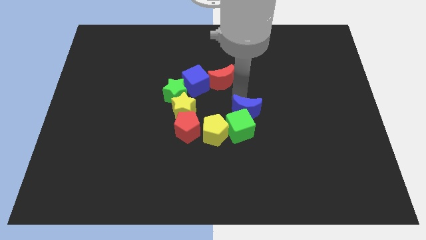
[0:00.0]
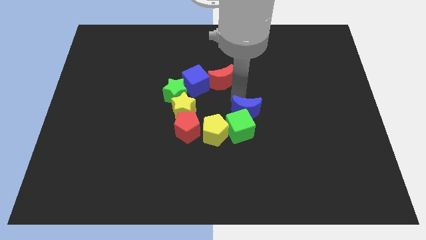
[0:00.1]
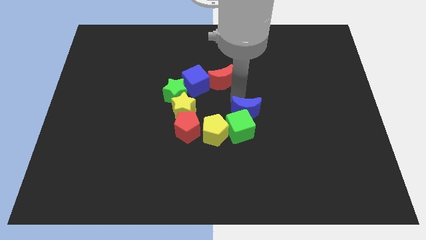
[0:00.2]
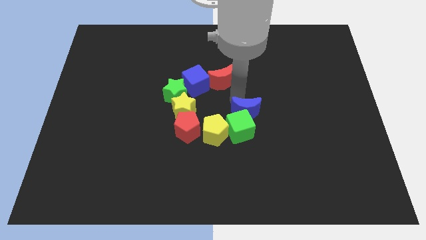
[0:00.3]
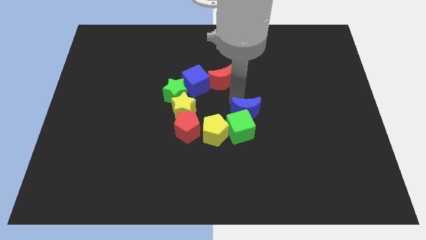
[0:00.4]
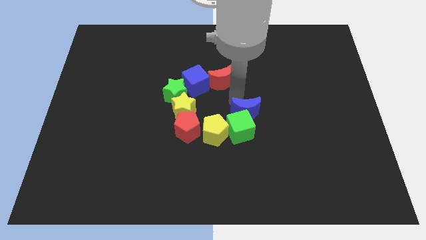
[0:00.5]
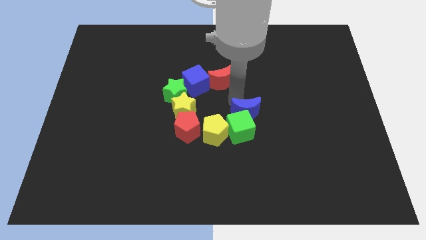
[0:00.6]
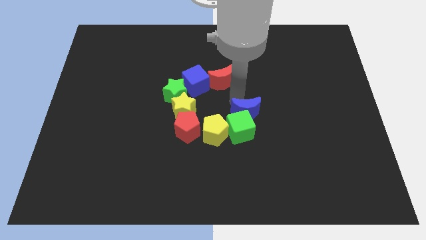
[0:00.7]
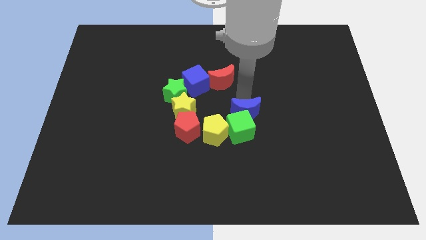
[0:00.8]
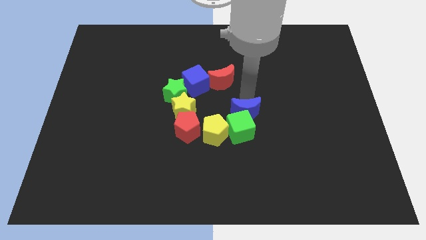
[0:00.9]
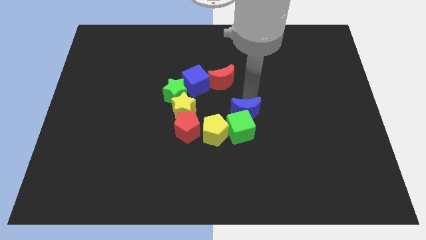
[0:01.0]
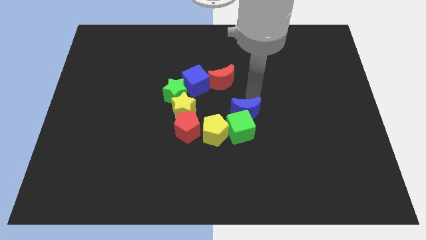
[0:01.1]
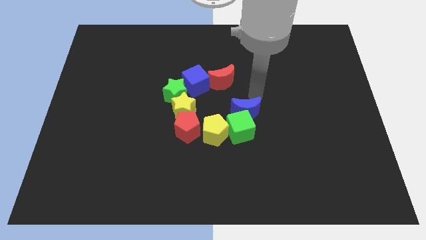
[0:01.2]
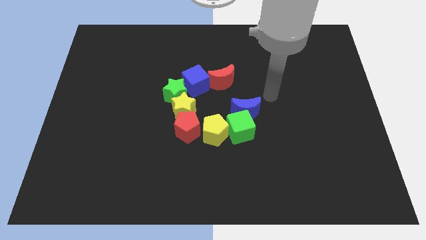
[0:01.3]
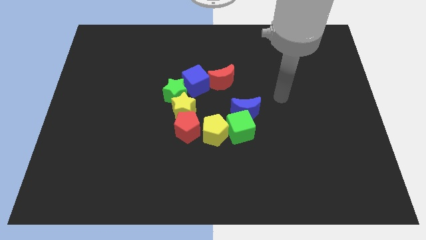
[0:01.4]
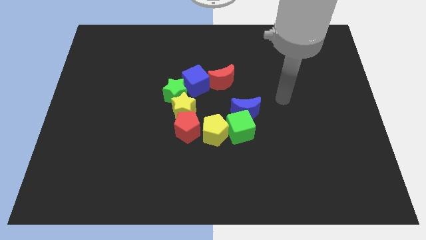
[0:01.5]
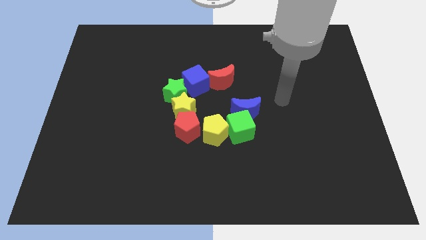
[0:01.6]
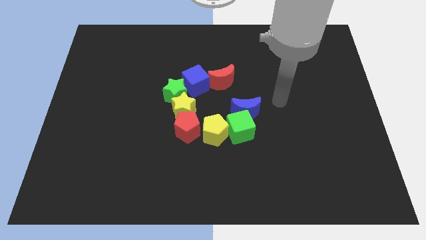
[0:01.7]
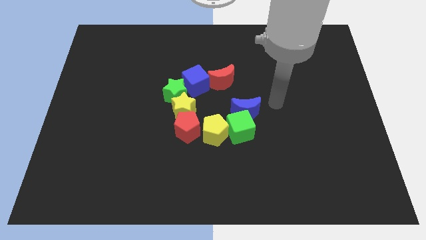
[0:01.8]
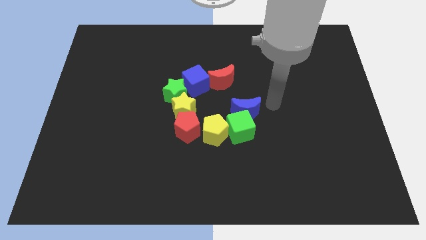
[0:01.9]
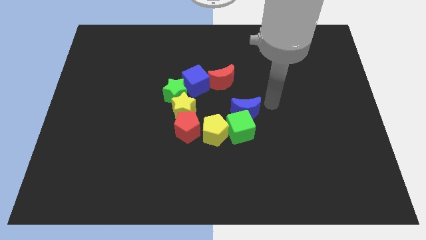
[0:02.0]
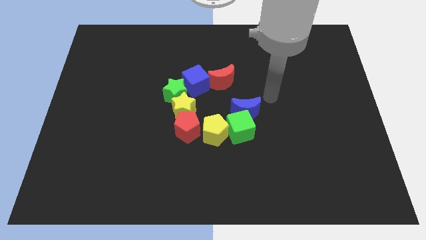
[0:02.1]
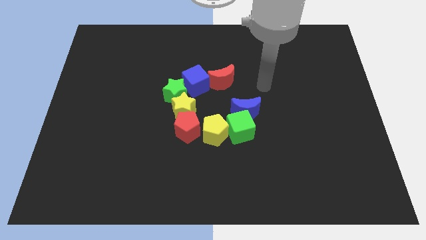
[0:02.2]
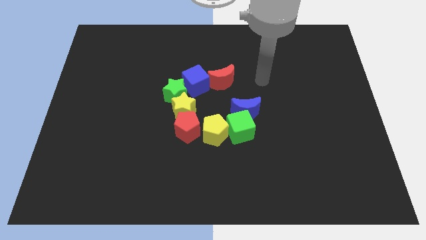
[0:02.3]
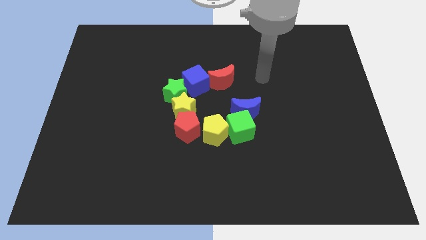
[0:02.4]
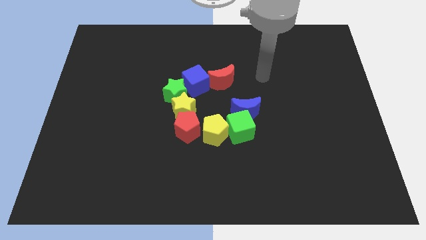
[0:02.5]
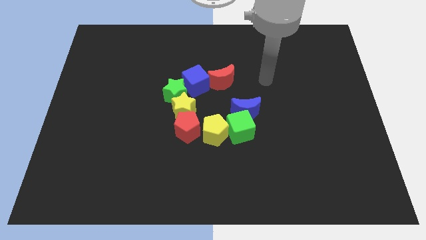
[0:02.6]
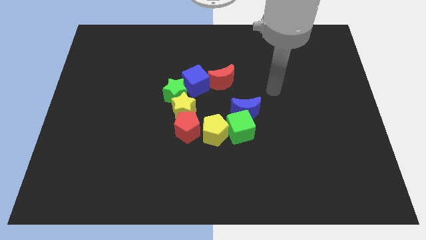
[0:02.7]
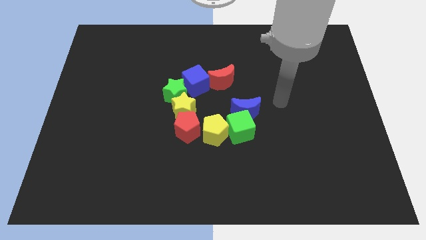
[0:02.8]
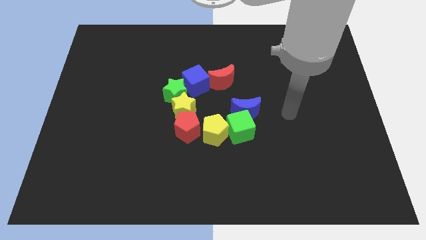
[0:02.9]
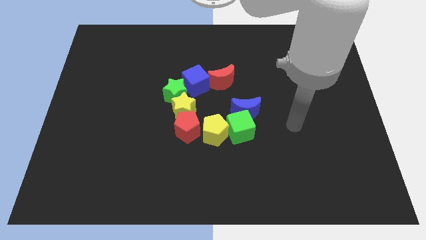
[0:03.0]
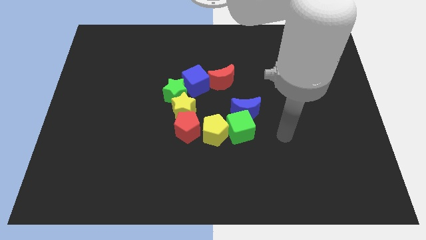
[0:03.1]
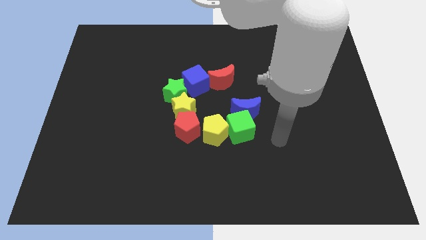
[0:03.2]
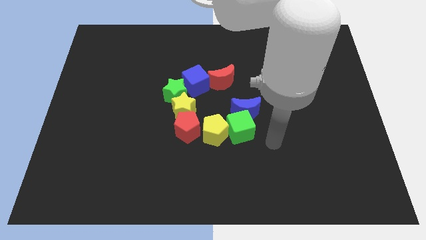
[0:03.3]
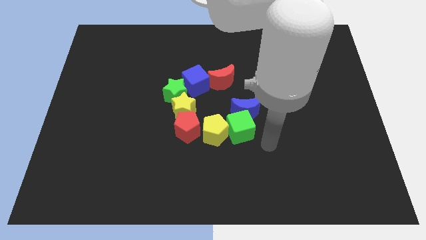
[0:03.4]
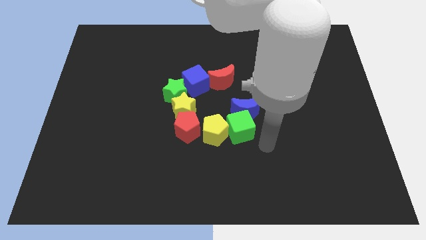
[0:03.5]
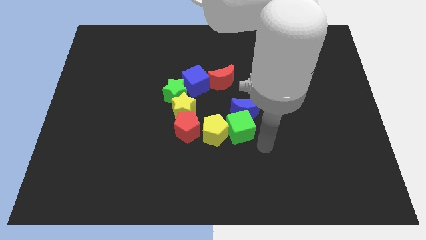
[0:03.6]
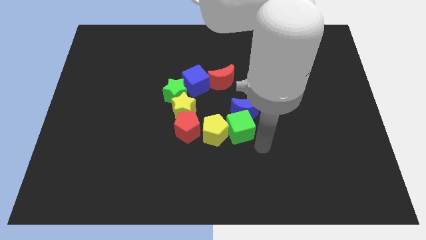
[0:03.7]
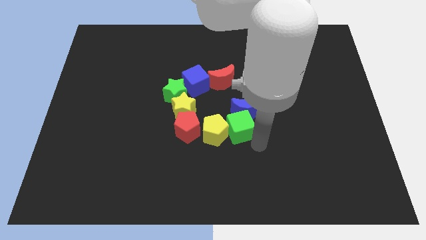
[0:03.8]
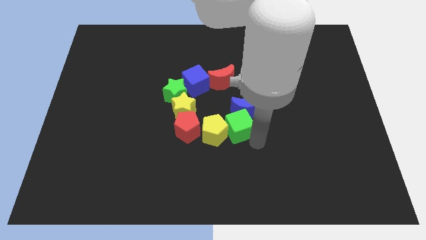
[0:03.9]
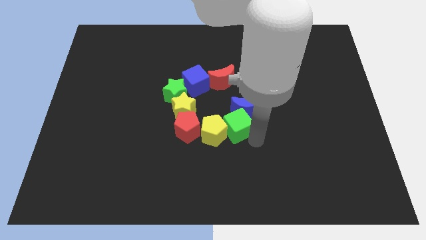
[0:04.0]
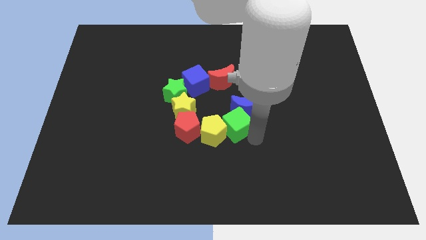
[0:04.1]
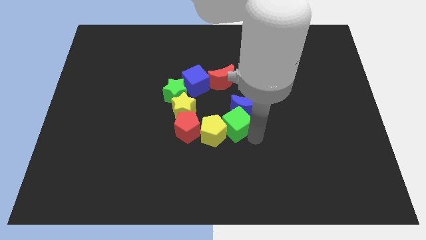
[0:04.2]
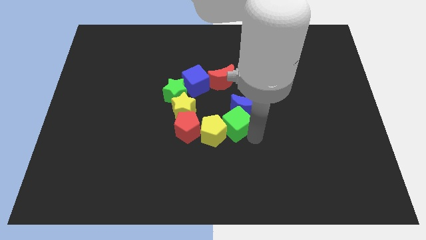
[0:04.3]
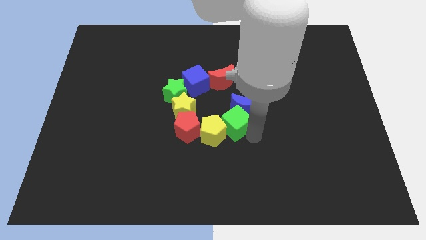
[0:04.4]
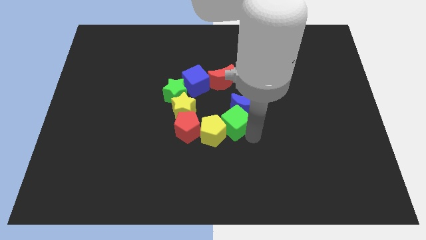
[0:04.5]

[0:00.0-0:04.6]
adjust the green cube

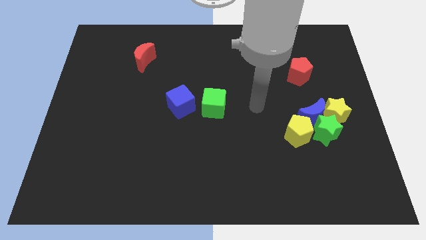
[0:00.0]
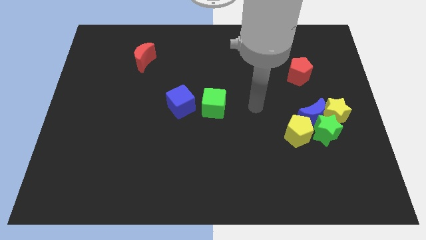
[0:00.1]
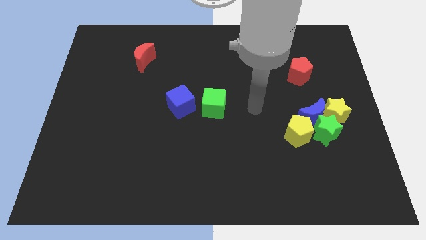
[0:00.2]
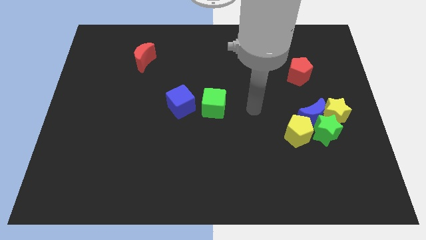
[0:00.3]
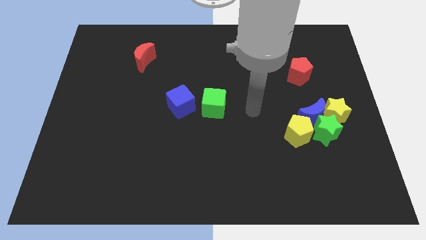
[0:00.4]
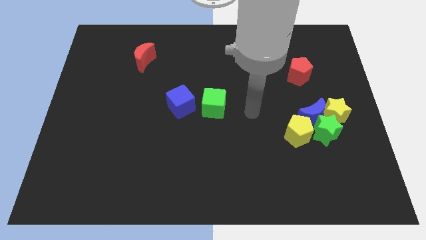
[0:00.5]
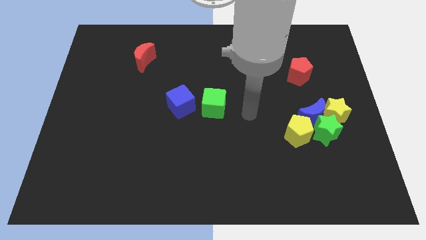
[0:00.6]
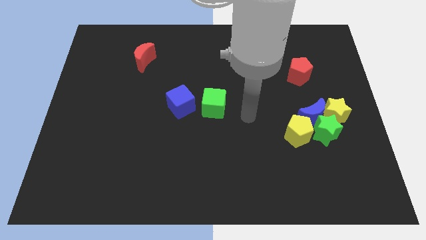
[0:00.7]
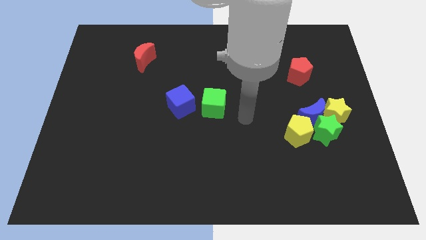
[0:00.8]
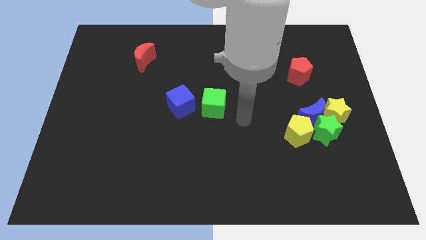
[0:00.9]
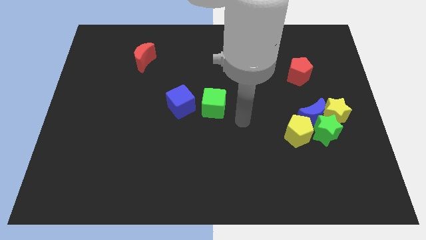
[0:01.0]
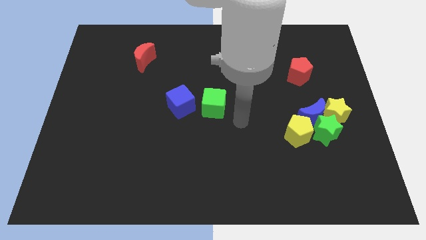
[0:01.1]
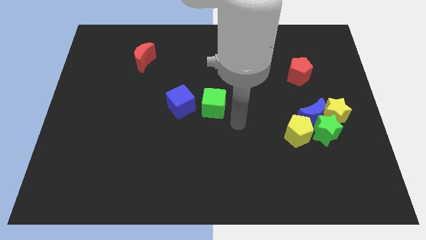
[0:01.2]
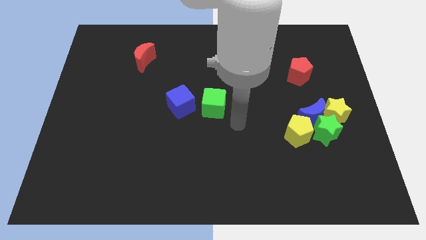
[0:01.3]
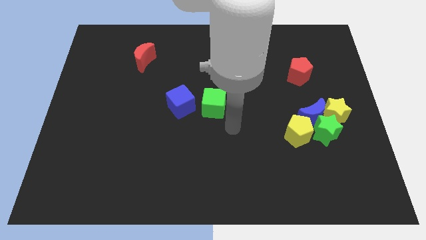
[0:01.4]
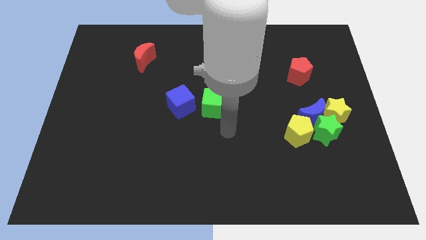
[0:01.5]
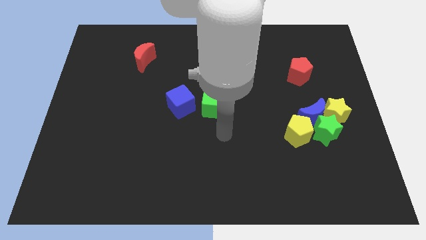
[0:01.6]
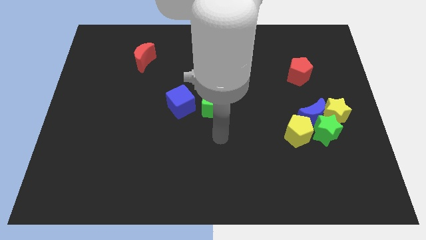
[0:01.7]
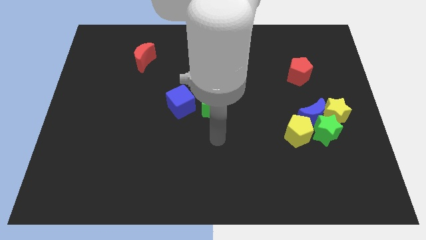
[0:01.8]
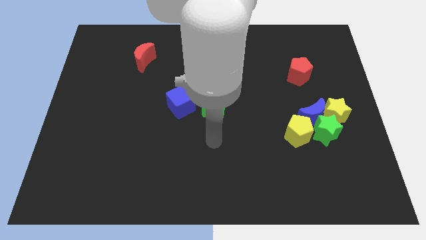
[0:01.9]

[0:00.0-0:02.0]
point your hand below the green cube

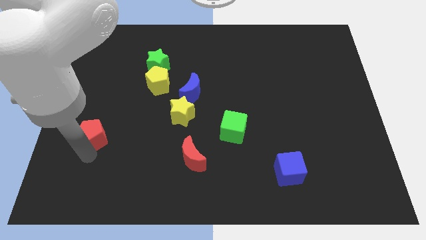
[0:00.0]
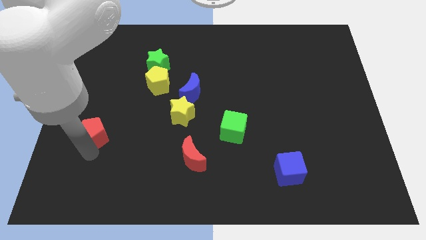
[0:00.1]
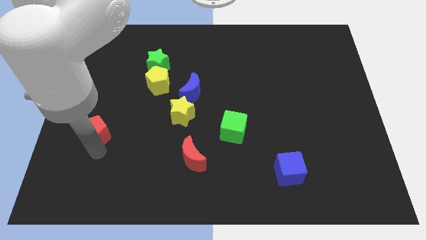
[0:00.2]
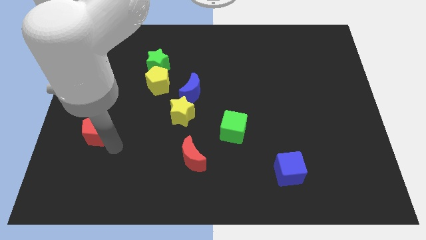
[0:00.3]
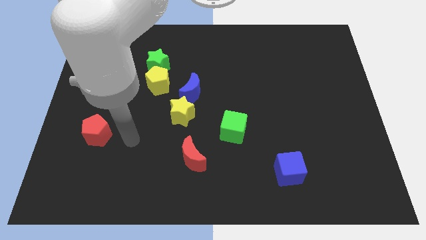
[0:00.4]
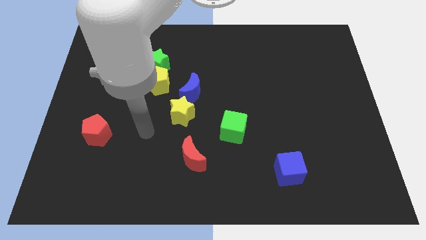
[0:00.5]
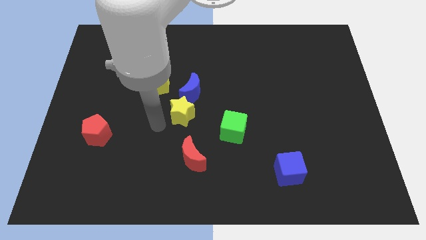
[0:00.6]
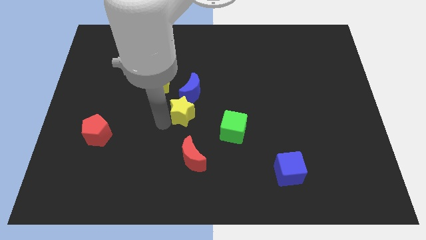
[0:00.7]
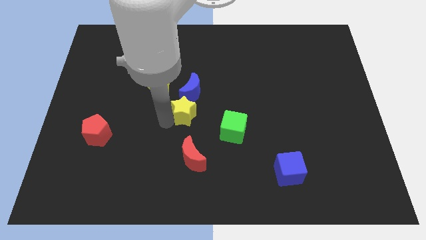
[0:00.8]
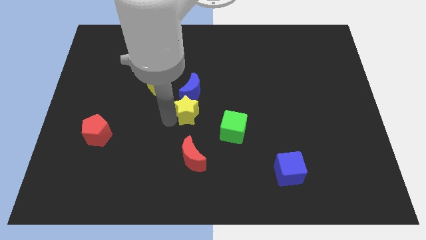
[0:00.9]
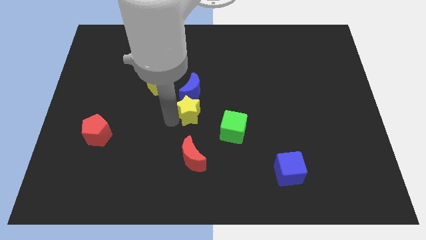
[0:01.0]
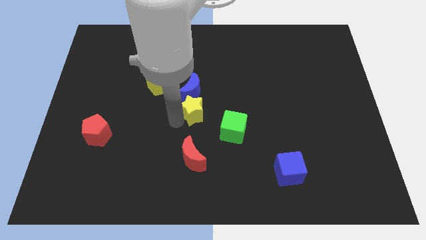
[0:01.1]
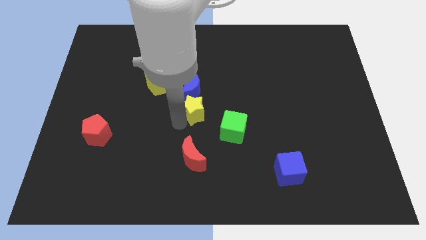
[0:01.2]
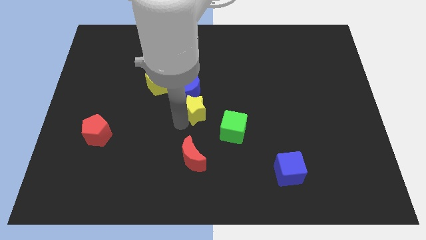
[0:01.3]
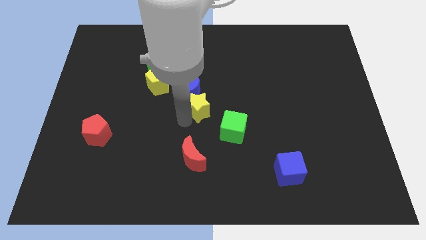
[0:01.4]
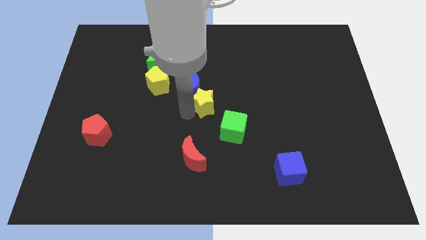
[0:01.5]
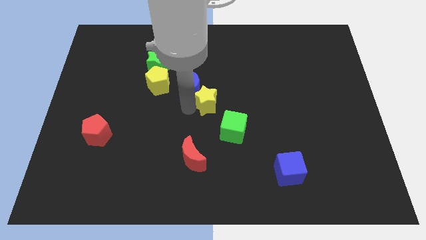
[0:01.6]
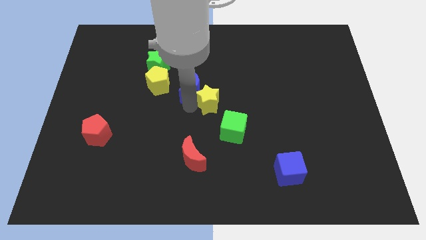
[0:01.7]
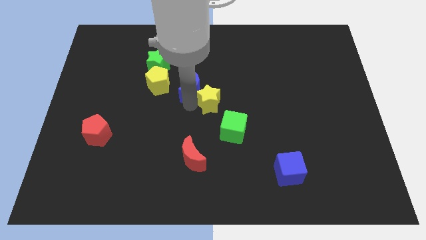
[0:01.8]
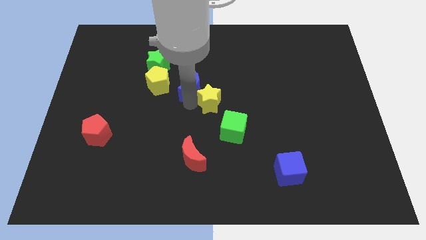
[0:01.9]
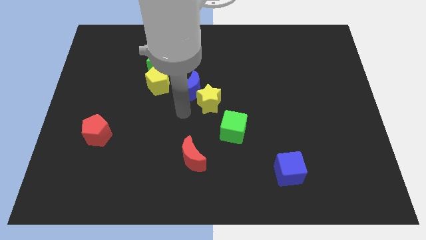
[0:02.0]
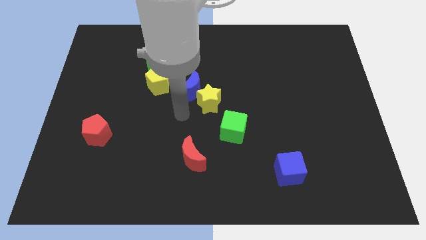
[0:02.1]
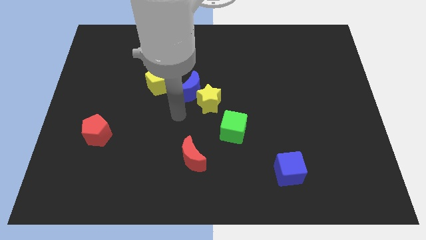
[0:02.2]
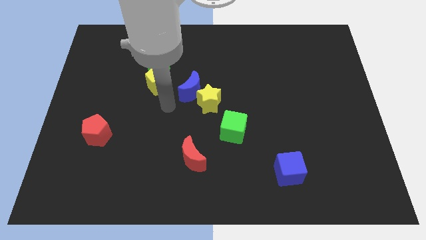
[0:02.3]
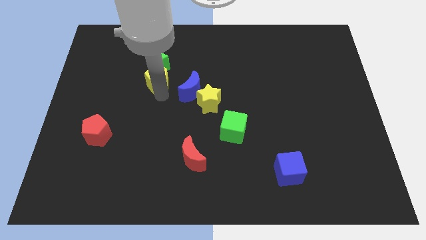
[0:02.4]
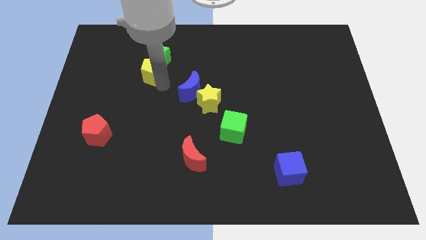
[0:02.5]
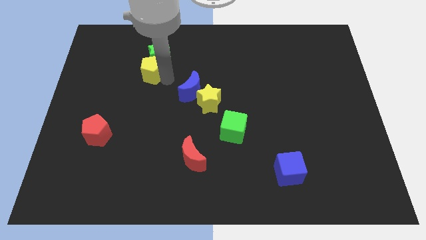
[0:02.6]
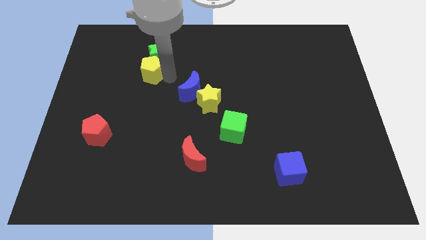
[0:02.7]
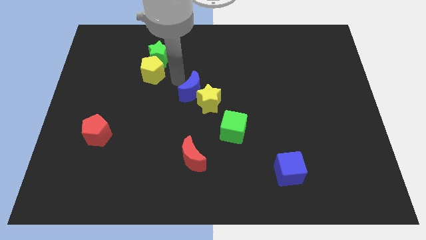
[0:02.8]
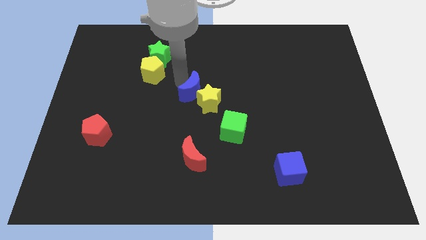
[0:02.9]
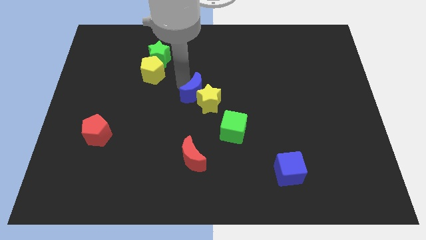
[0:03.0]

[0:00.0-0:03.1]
move the yellow star to the left of blue moon
